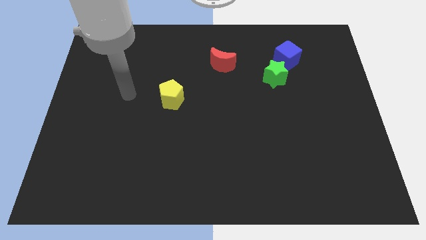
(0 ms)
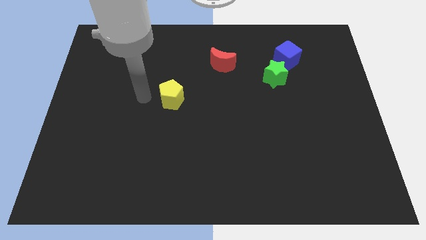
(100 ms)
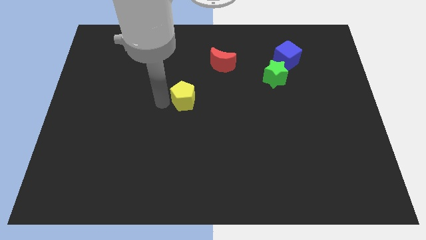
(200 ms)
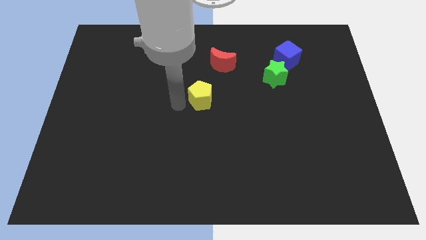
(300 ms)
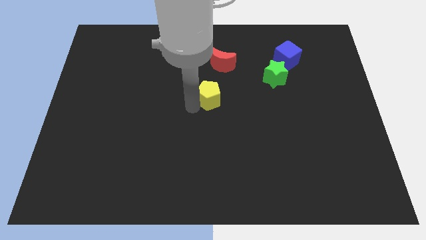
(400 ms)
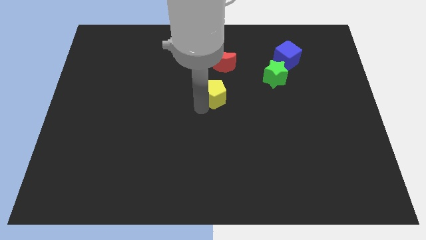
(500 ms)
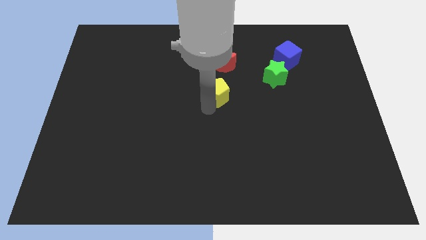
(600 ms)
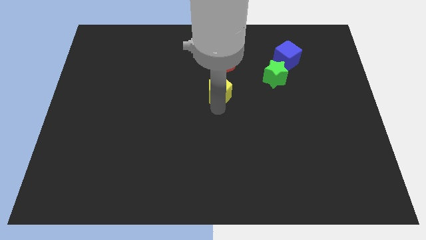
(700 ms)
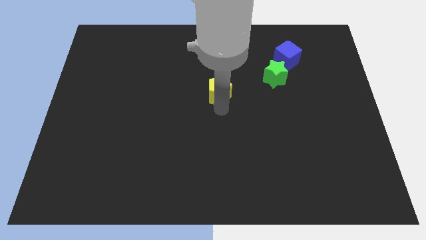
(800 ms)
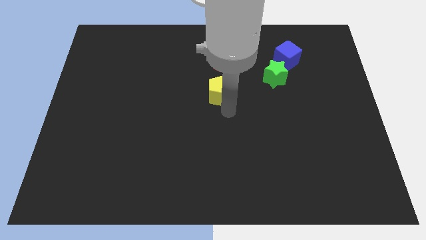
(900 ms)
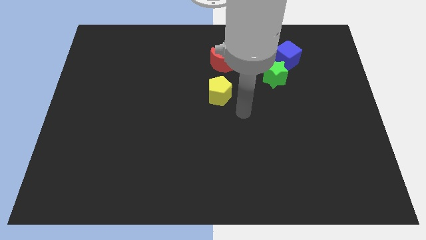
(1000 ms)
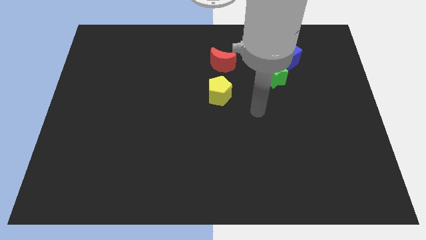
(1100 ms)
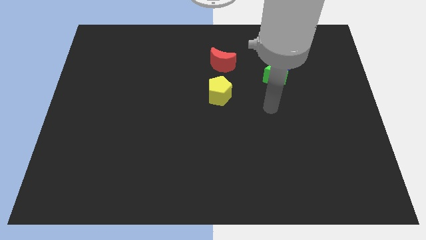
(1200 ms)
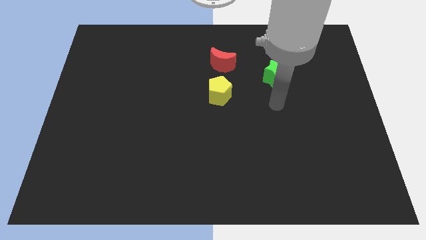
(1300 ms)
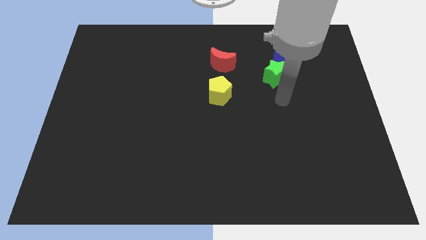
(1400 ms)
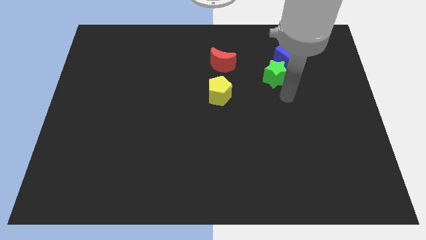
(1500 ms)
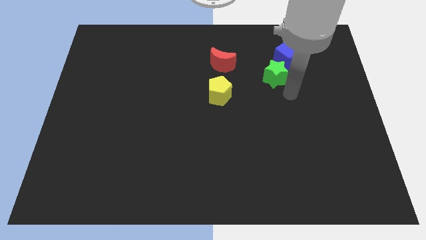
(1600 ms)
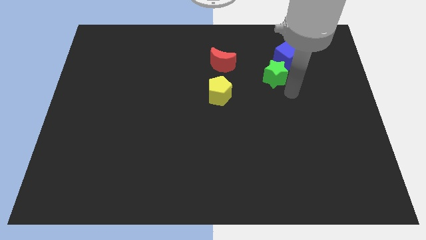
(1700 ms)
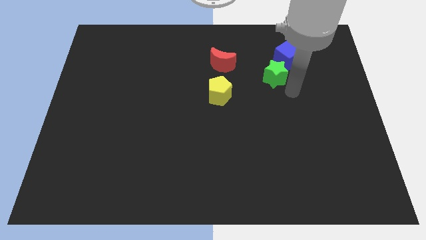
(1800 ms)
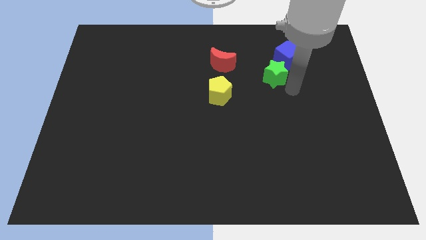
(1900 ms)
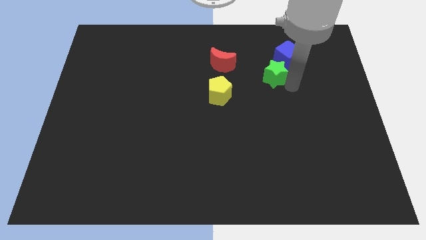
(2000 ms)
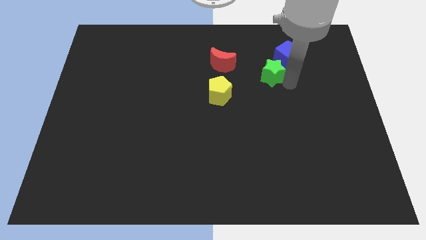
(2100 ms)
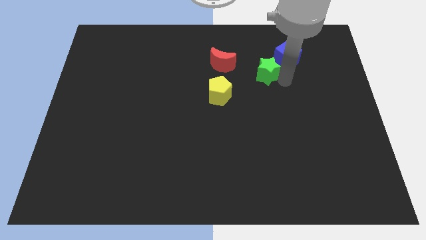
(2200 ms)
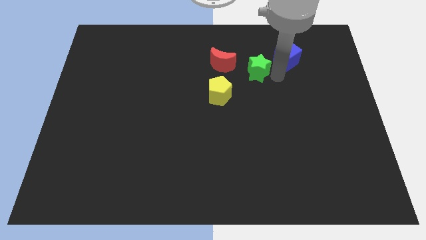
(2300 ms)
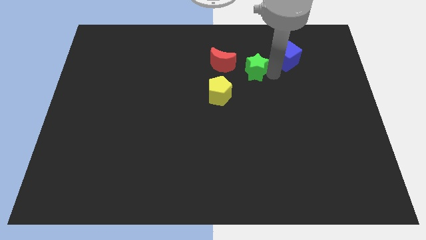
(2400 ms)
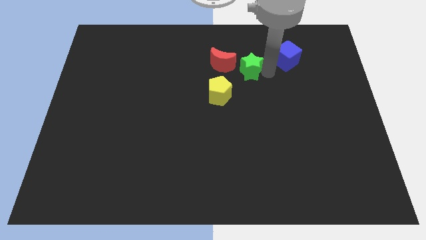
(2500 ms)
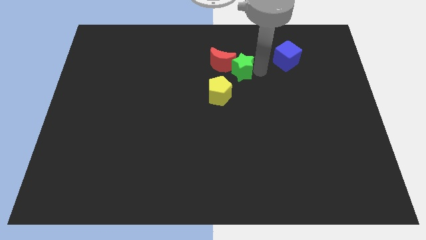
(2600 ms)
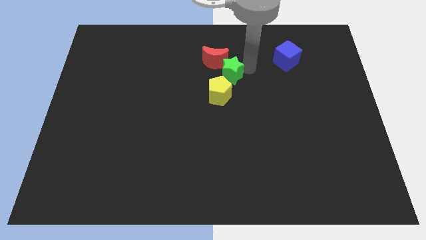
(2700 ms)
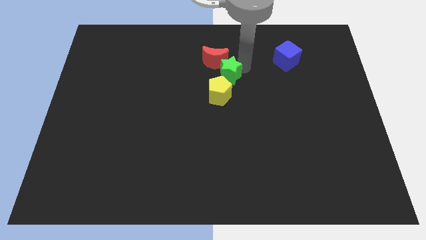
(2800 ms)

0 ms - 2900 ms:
slide the star close to the red block

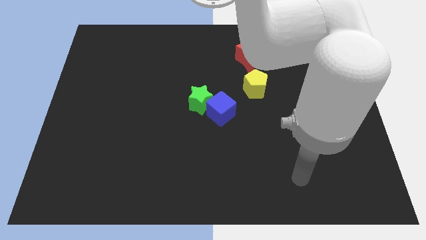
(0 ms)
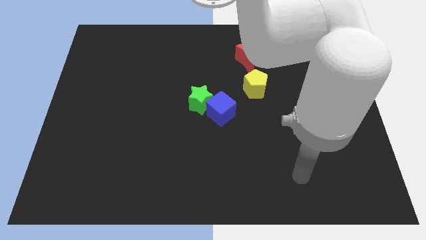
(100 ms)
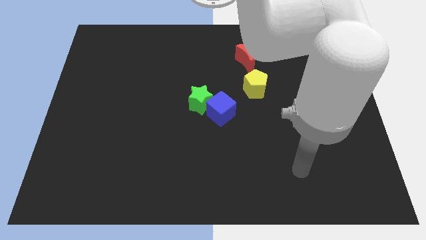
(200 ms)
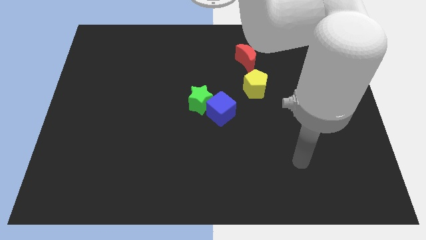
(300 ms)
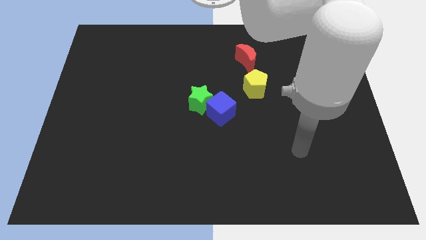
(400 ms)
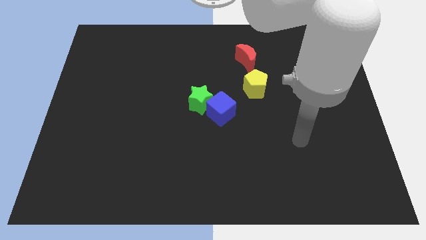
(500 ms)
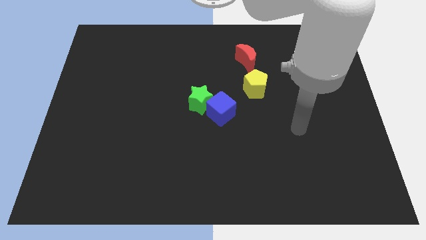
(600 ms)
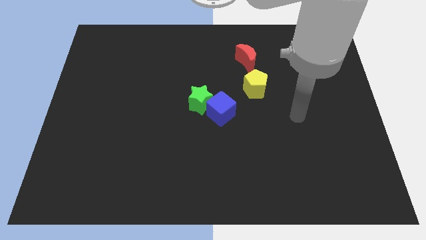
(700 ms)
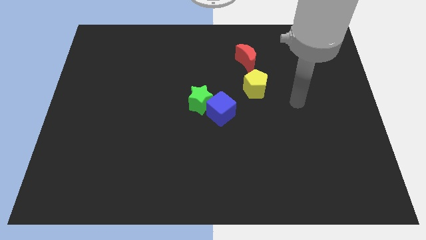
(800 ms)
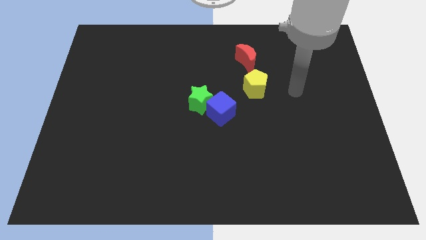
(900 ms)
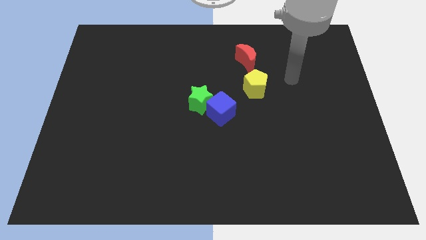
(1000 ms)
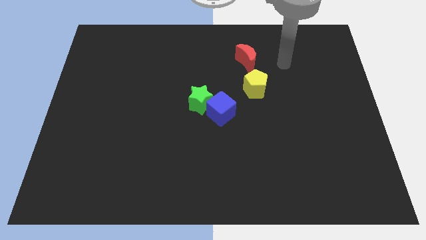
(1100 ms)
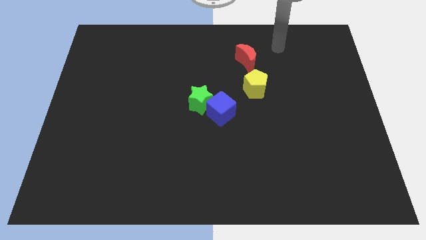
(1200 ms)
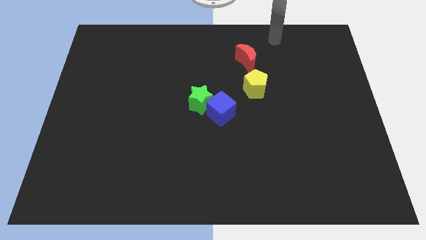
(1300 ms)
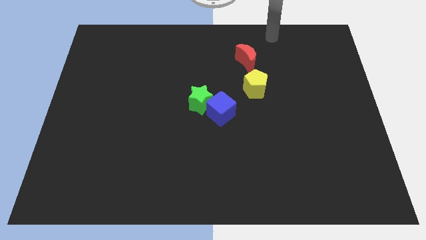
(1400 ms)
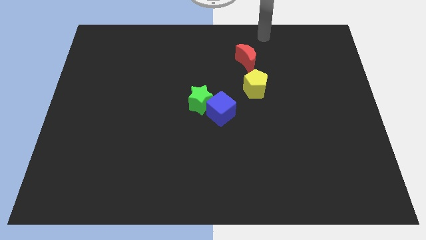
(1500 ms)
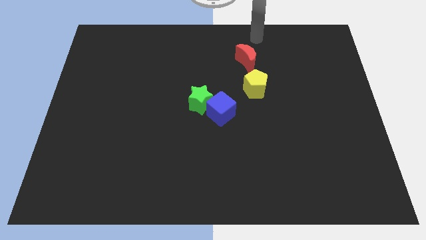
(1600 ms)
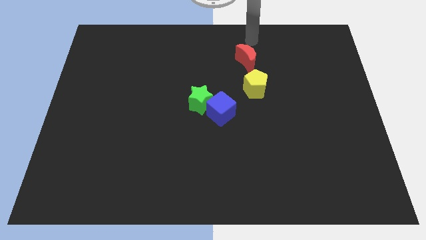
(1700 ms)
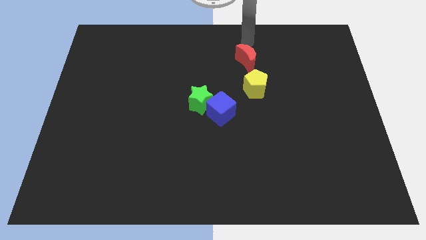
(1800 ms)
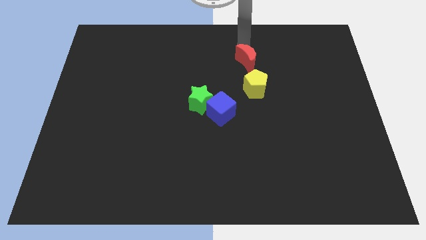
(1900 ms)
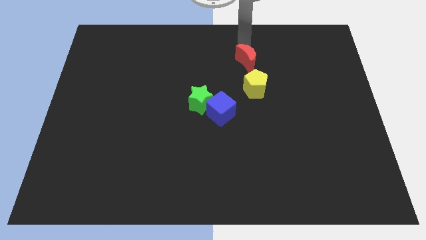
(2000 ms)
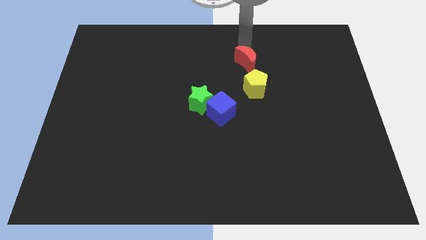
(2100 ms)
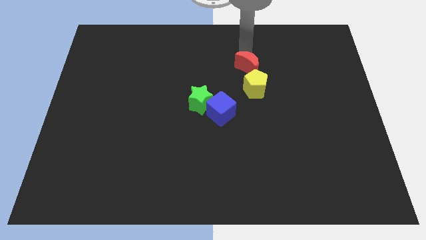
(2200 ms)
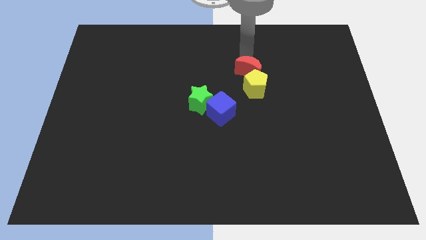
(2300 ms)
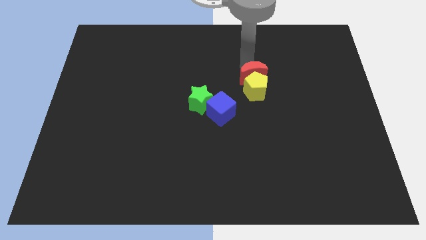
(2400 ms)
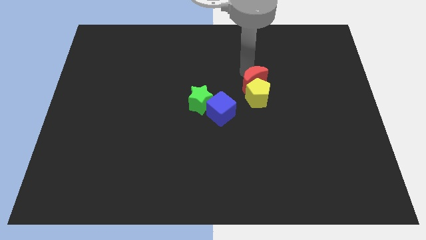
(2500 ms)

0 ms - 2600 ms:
slide the red block towards the pentagon

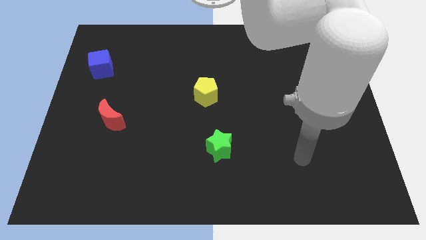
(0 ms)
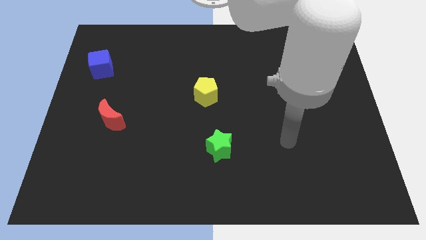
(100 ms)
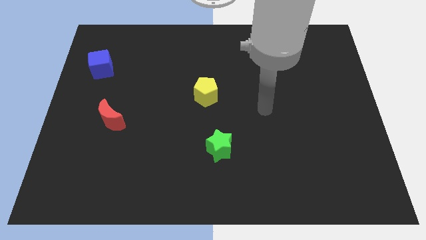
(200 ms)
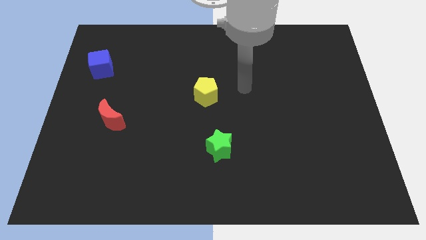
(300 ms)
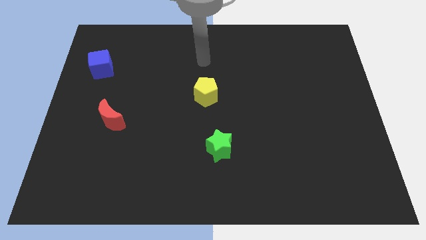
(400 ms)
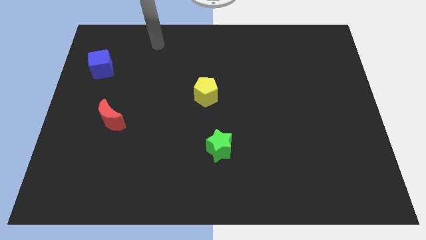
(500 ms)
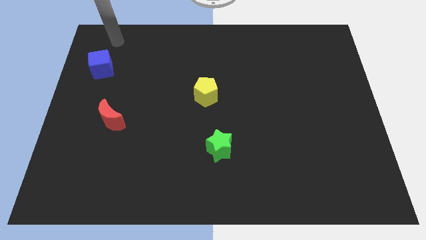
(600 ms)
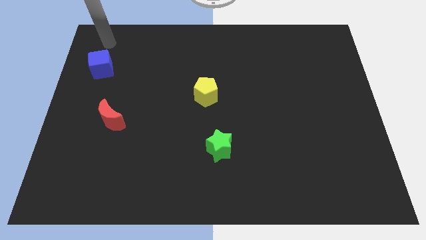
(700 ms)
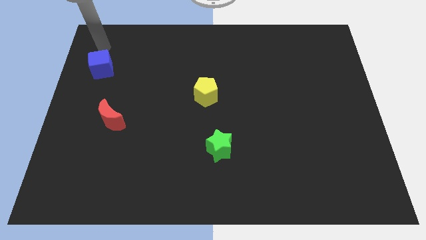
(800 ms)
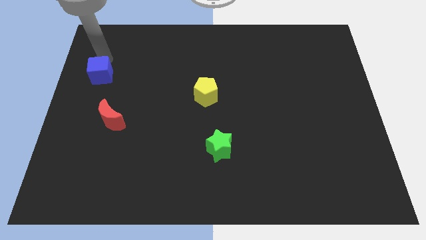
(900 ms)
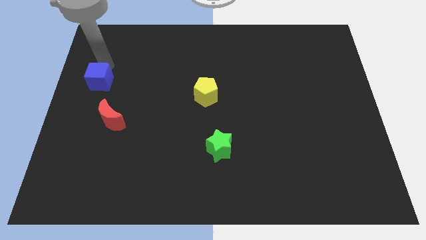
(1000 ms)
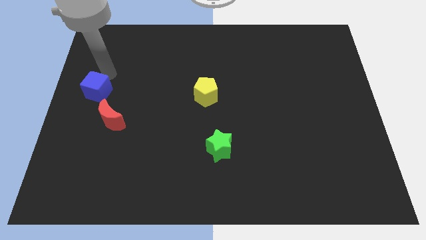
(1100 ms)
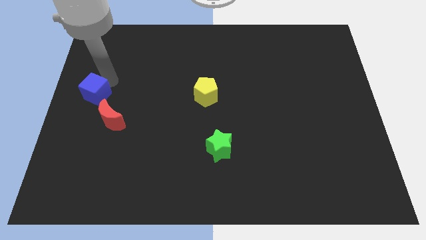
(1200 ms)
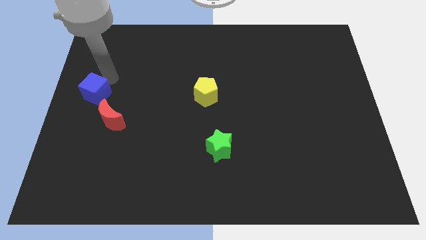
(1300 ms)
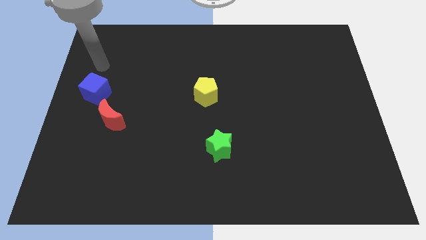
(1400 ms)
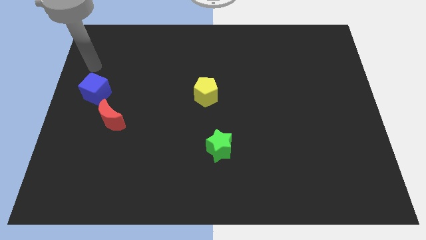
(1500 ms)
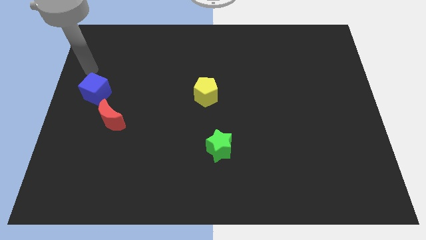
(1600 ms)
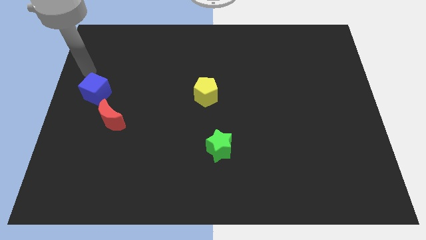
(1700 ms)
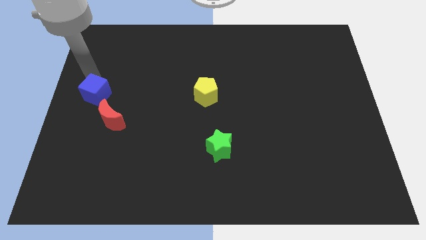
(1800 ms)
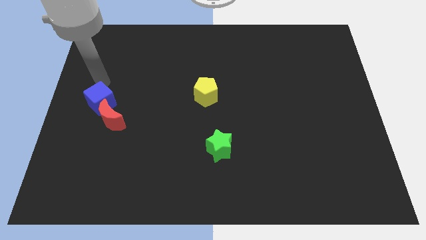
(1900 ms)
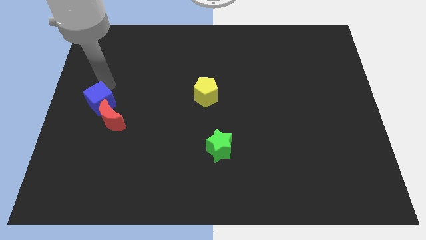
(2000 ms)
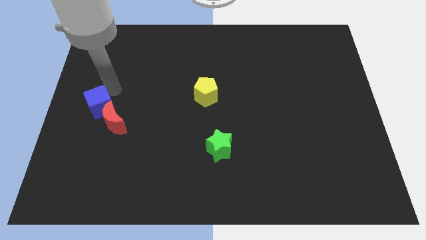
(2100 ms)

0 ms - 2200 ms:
slide the cube towards the red moon

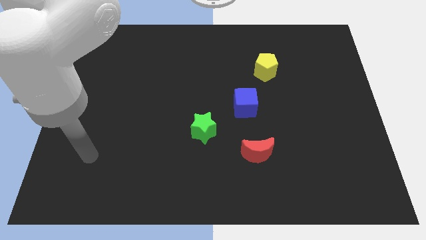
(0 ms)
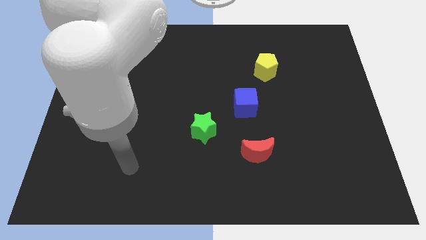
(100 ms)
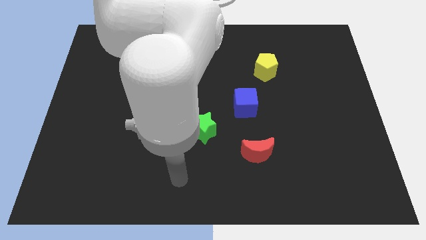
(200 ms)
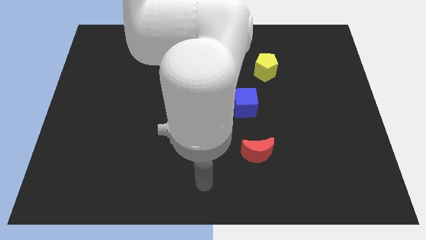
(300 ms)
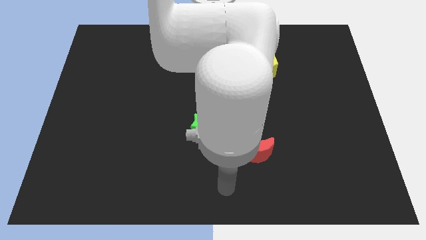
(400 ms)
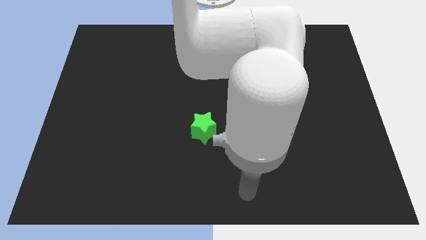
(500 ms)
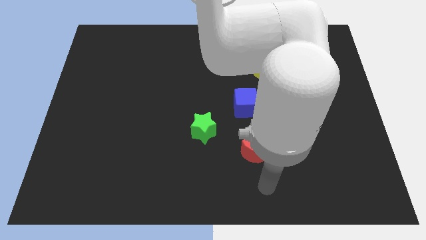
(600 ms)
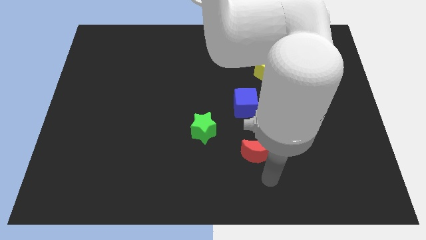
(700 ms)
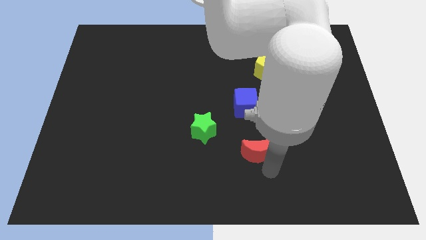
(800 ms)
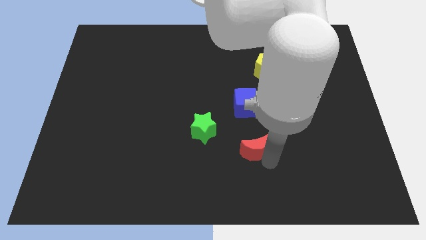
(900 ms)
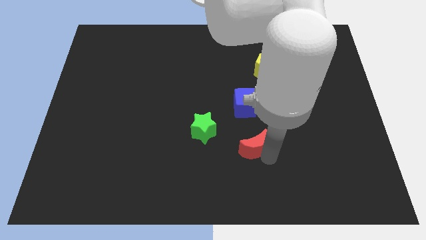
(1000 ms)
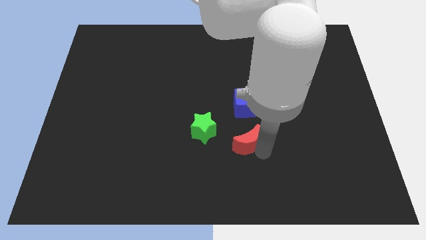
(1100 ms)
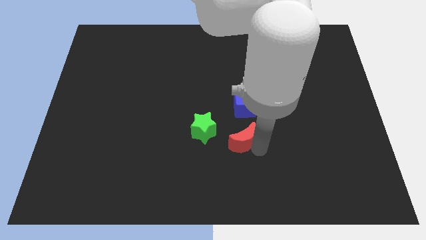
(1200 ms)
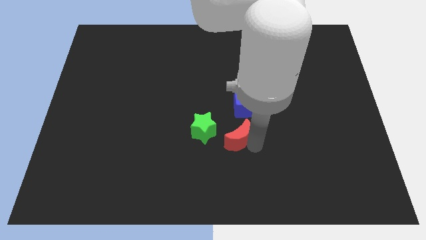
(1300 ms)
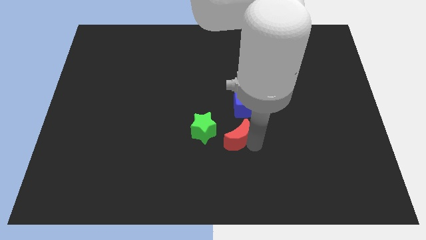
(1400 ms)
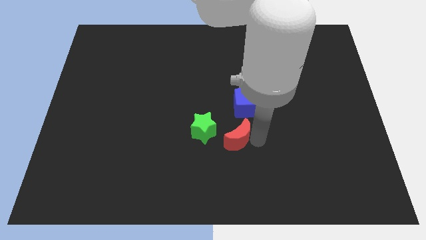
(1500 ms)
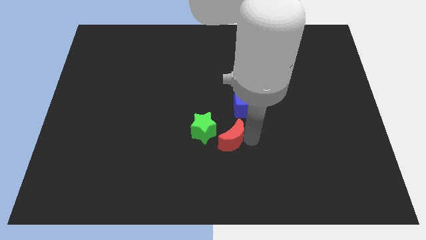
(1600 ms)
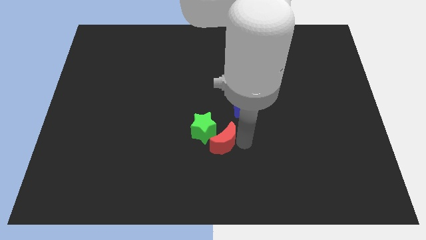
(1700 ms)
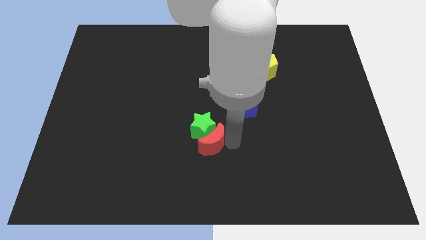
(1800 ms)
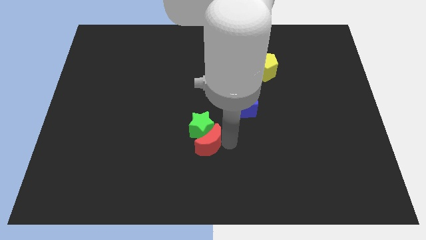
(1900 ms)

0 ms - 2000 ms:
push the red moon to the green star
